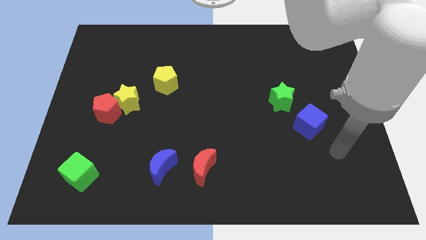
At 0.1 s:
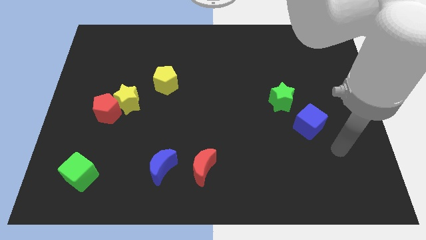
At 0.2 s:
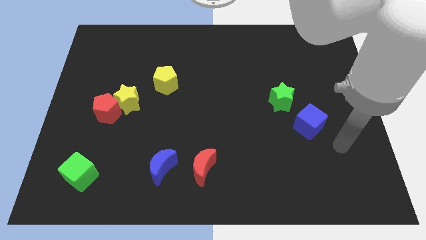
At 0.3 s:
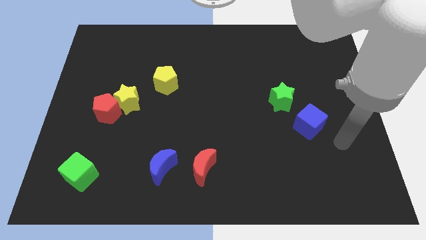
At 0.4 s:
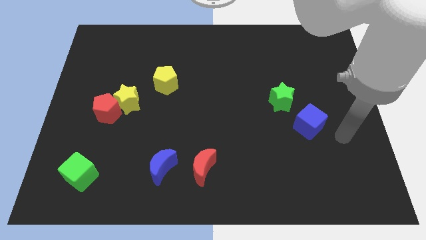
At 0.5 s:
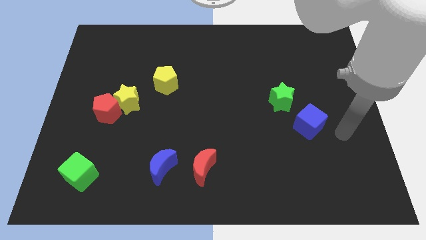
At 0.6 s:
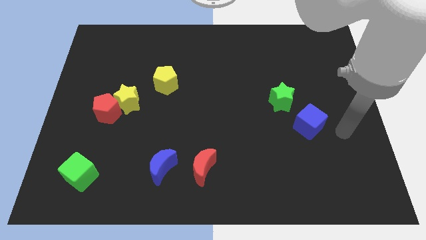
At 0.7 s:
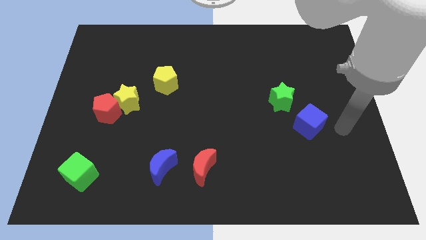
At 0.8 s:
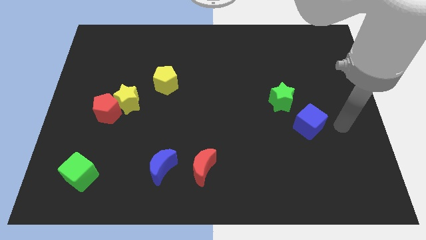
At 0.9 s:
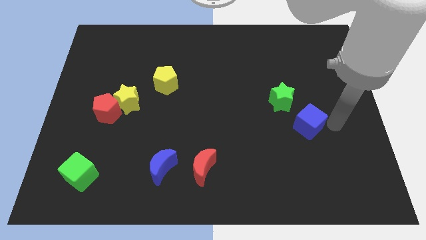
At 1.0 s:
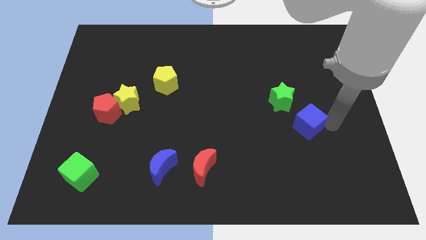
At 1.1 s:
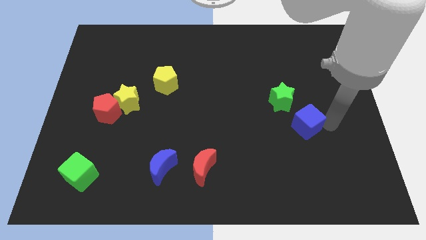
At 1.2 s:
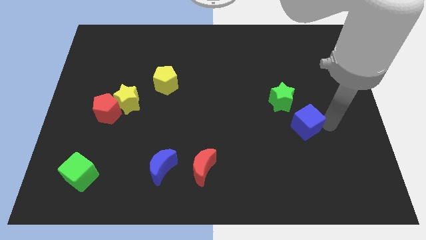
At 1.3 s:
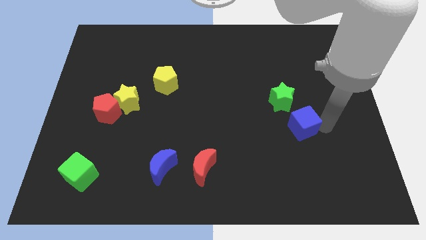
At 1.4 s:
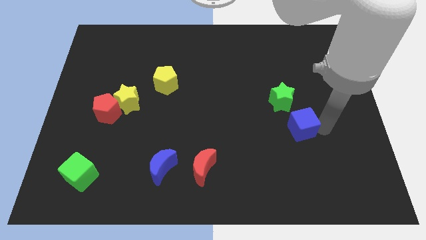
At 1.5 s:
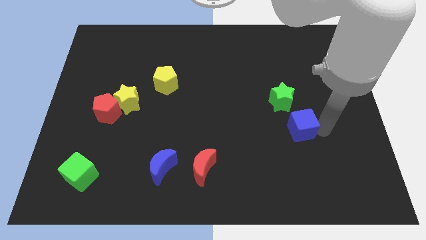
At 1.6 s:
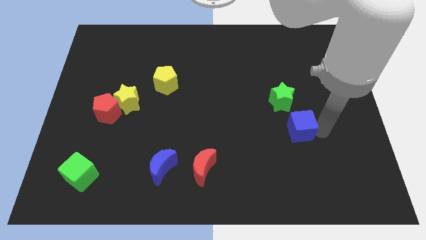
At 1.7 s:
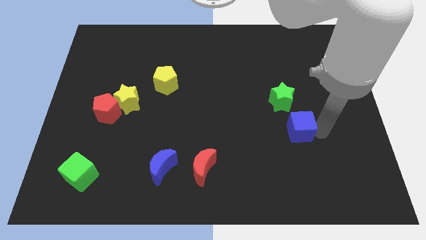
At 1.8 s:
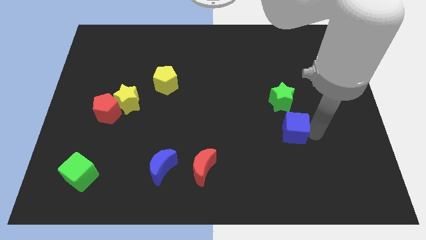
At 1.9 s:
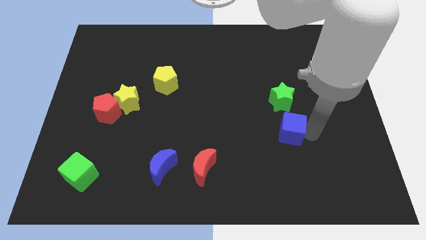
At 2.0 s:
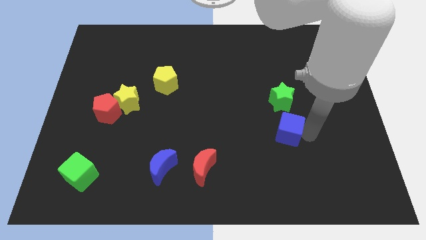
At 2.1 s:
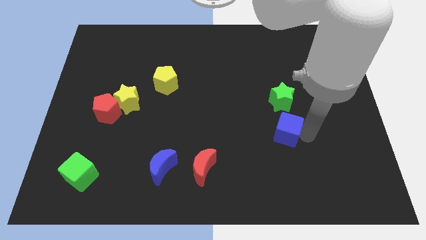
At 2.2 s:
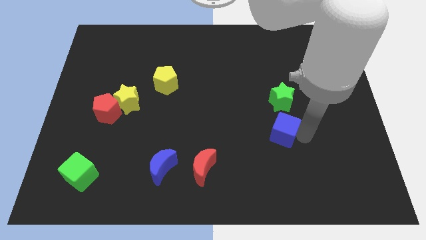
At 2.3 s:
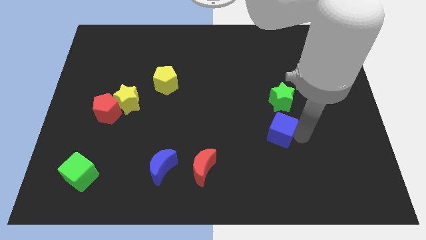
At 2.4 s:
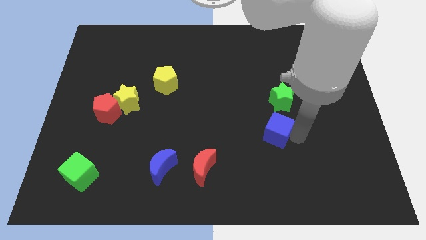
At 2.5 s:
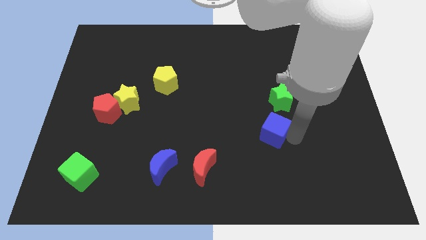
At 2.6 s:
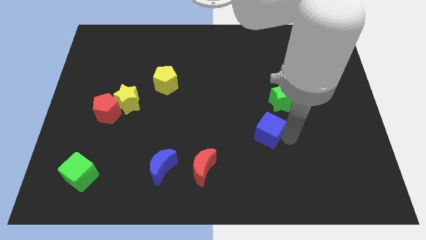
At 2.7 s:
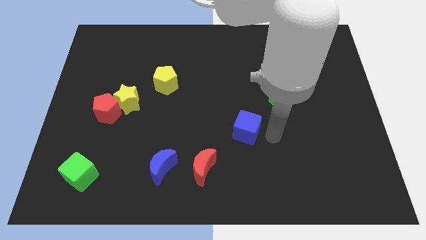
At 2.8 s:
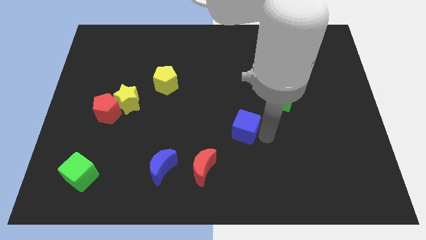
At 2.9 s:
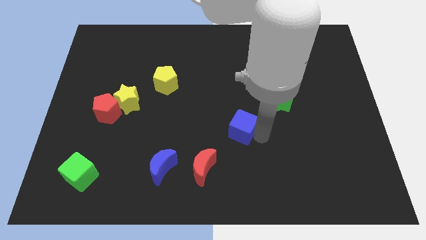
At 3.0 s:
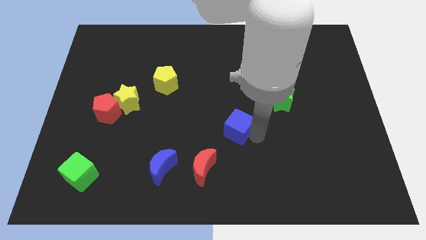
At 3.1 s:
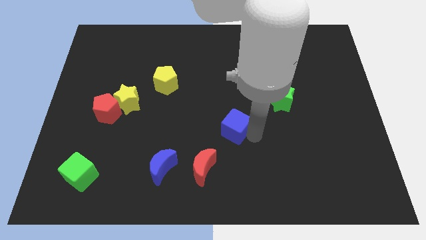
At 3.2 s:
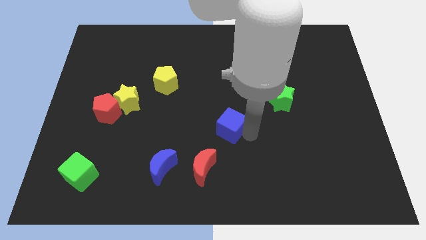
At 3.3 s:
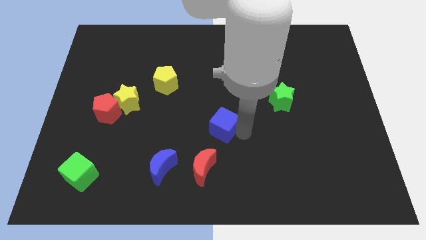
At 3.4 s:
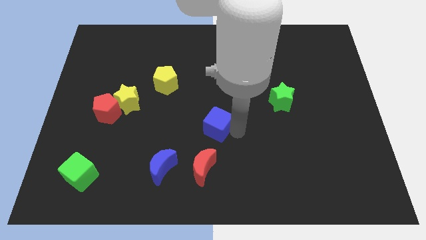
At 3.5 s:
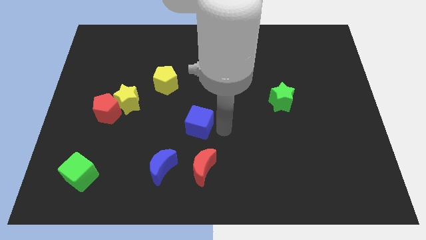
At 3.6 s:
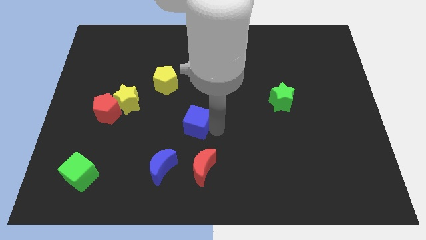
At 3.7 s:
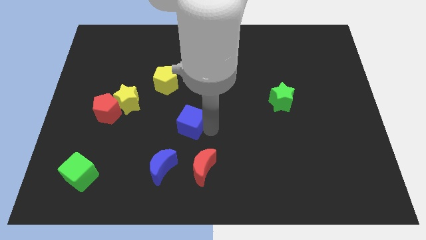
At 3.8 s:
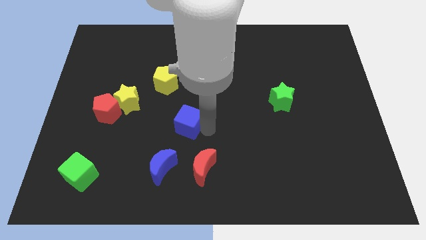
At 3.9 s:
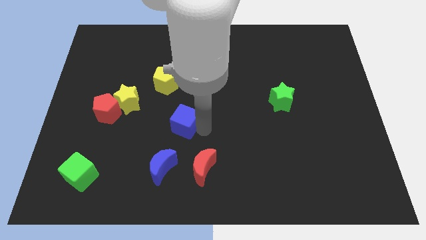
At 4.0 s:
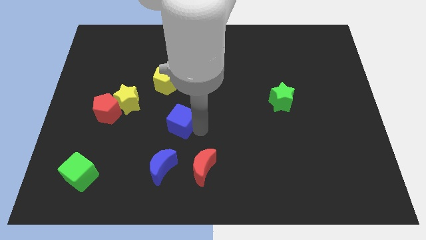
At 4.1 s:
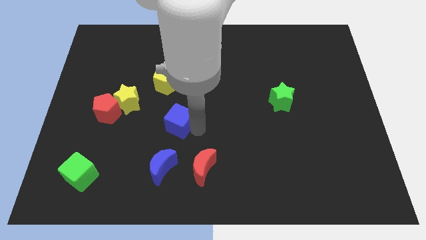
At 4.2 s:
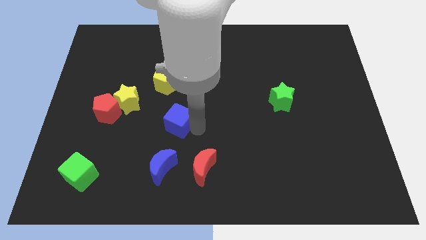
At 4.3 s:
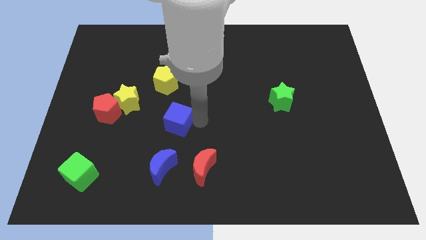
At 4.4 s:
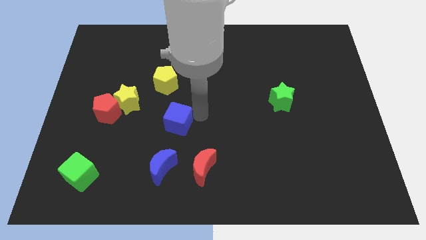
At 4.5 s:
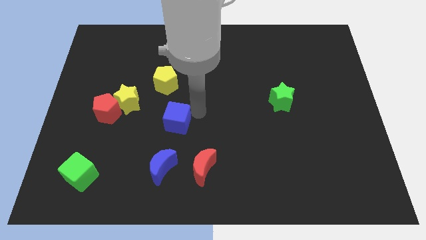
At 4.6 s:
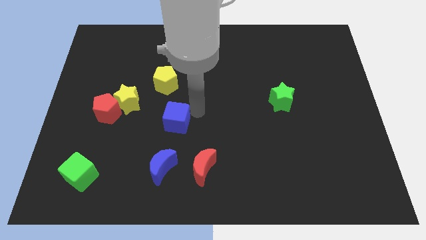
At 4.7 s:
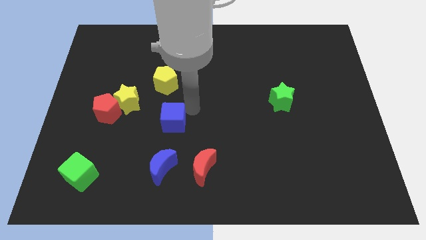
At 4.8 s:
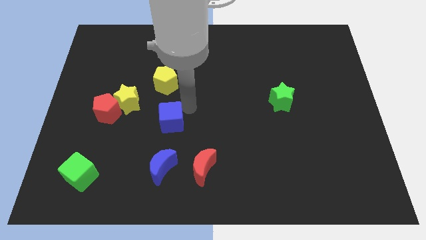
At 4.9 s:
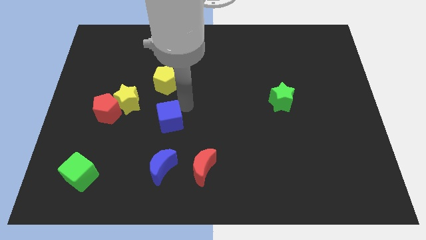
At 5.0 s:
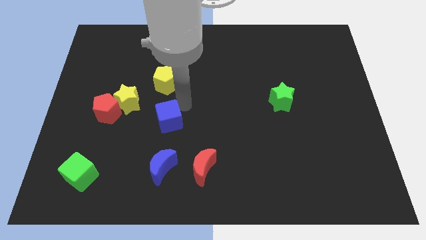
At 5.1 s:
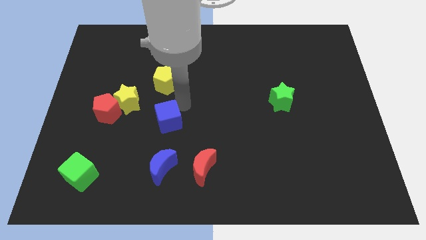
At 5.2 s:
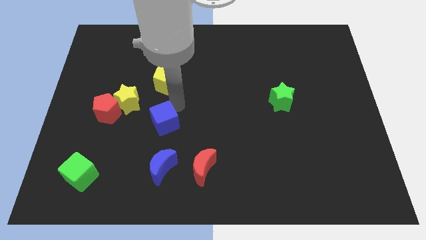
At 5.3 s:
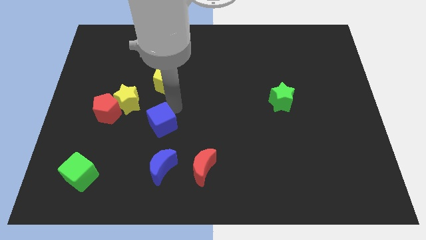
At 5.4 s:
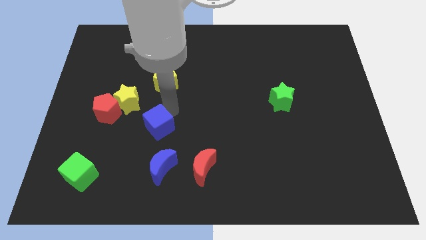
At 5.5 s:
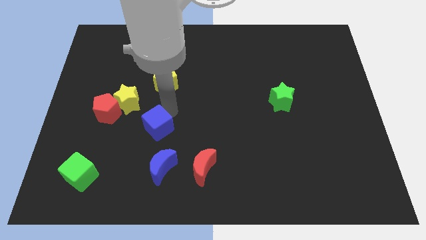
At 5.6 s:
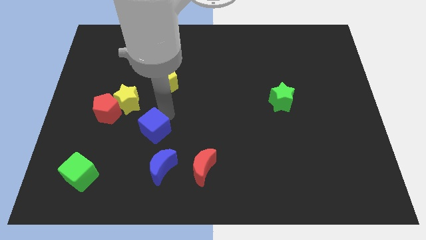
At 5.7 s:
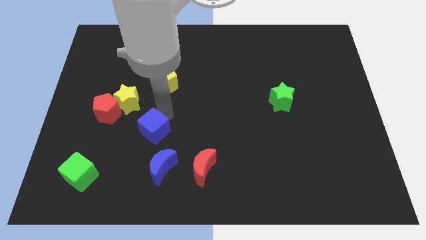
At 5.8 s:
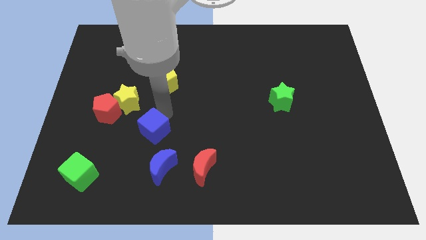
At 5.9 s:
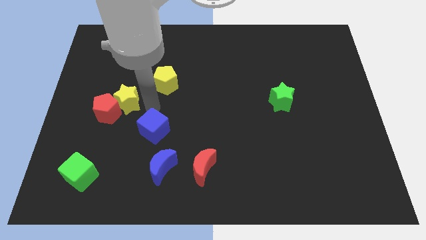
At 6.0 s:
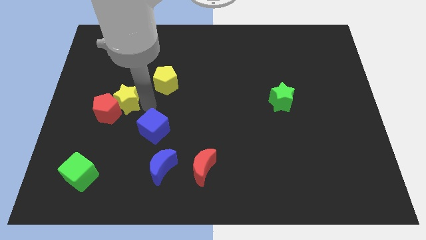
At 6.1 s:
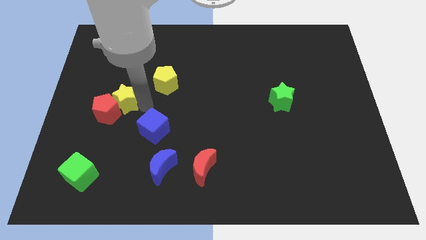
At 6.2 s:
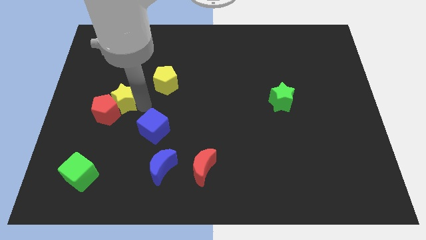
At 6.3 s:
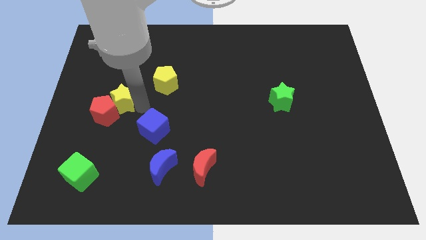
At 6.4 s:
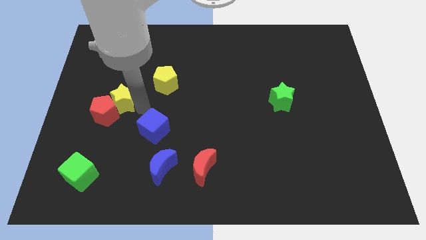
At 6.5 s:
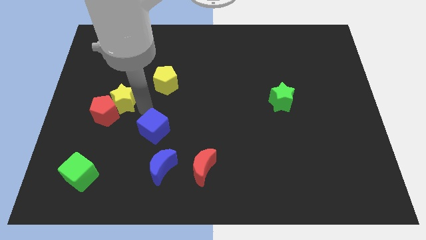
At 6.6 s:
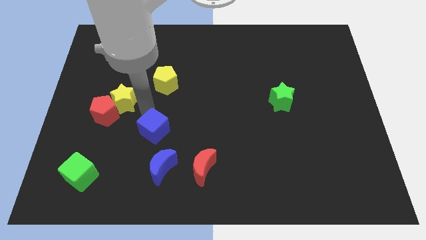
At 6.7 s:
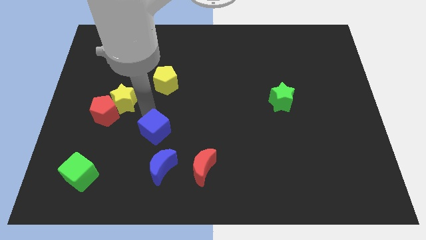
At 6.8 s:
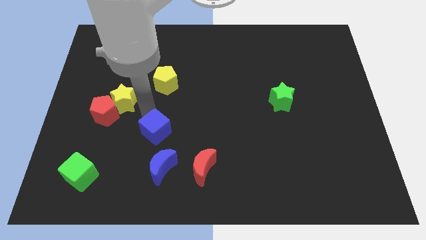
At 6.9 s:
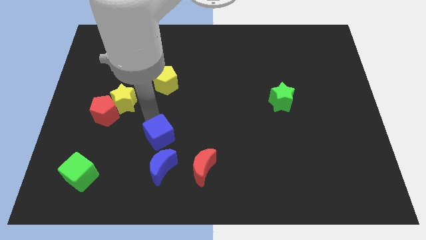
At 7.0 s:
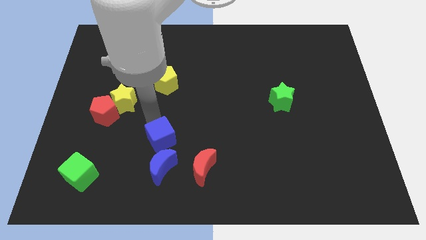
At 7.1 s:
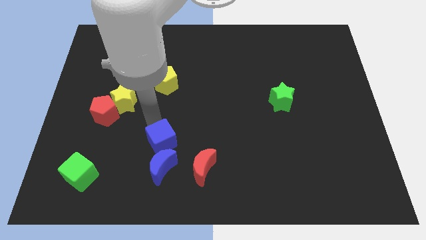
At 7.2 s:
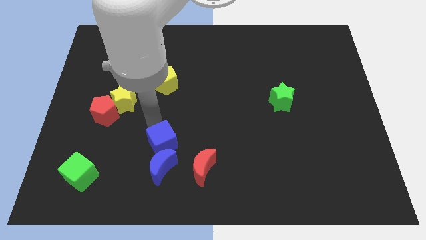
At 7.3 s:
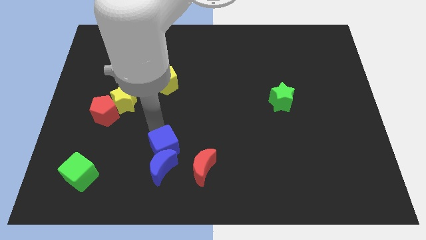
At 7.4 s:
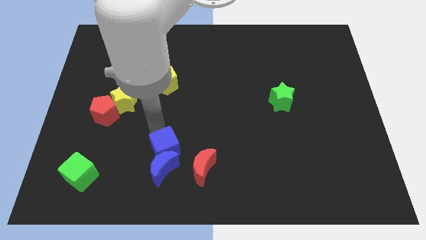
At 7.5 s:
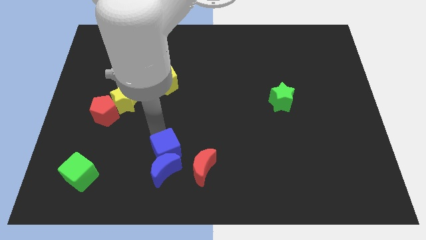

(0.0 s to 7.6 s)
put the blue cube towards the blue moon

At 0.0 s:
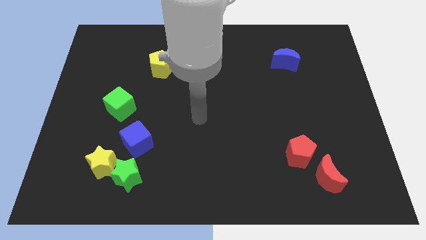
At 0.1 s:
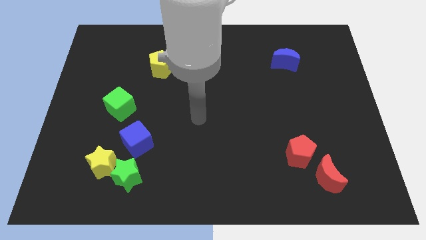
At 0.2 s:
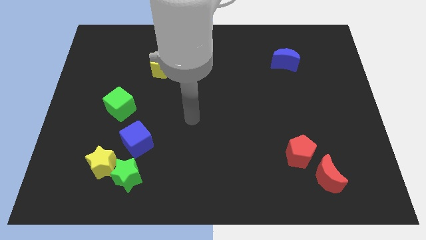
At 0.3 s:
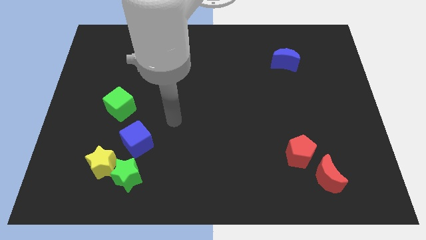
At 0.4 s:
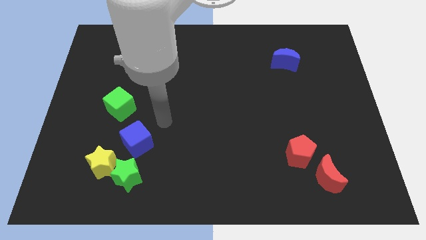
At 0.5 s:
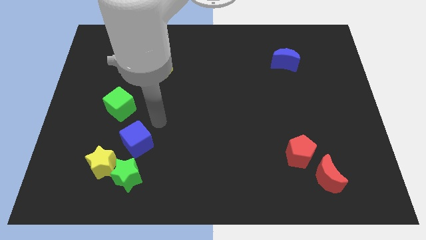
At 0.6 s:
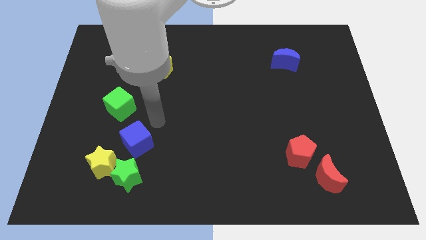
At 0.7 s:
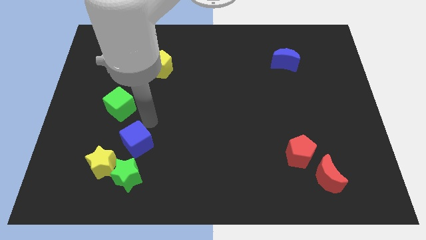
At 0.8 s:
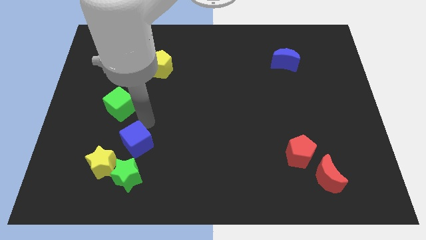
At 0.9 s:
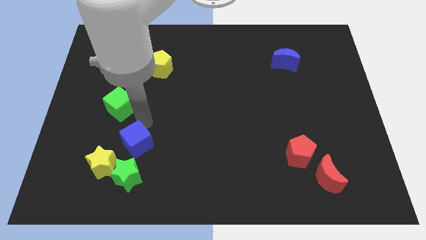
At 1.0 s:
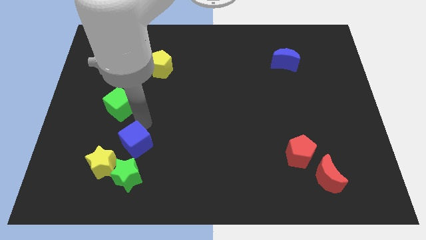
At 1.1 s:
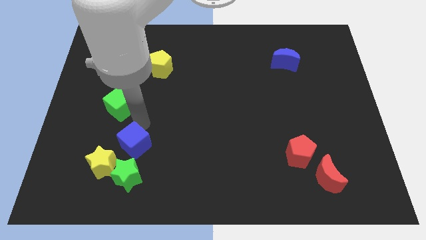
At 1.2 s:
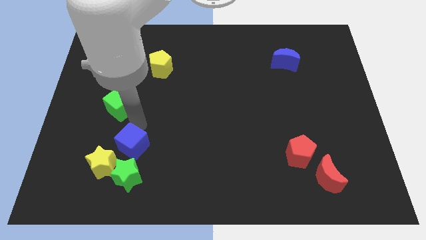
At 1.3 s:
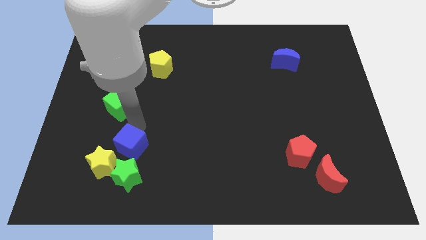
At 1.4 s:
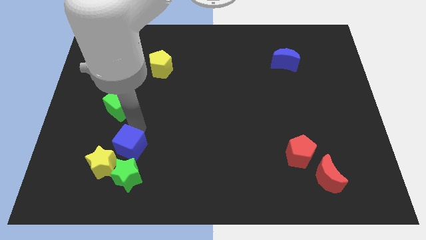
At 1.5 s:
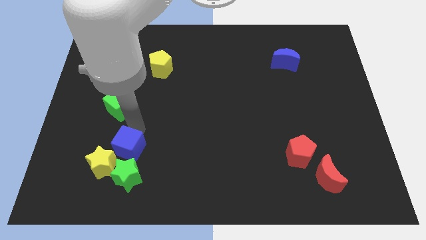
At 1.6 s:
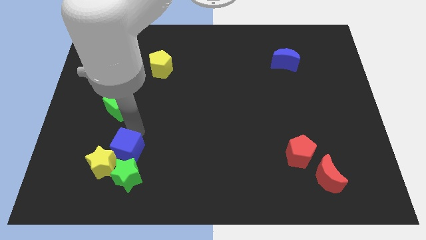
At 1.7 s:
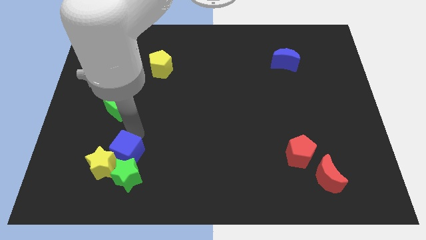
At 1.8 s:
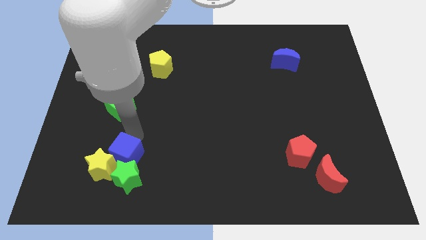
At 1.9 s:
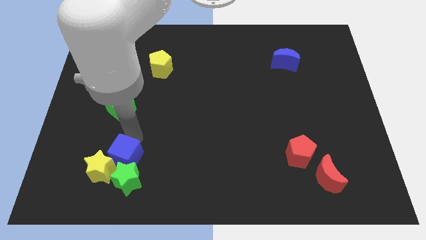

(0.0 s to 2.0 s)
push the blue cube to the green star
